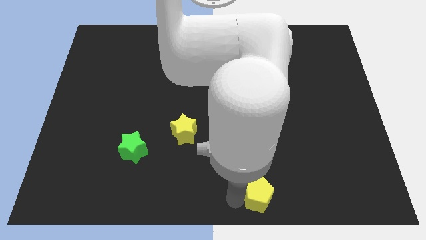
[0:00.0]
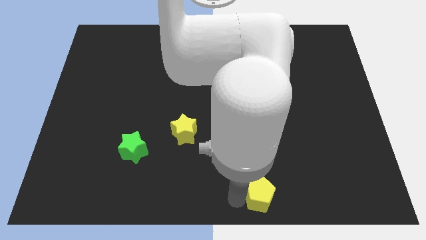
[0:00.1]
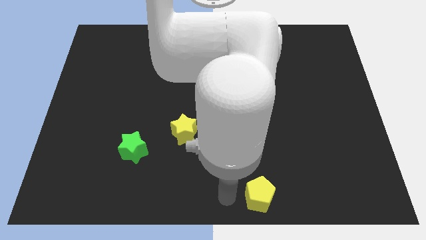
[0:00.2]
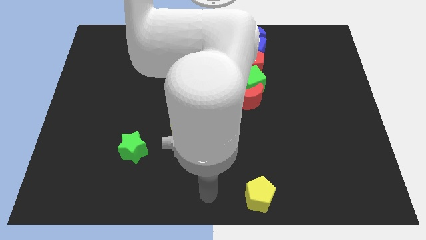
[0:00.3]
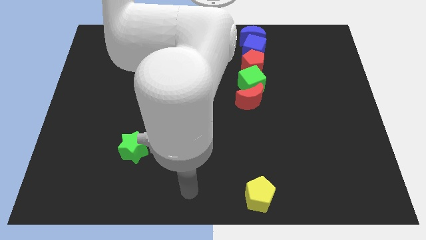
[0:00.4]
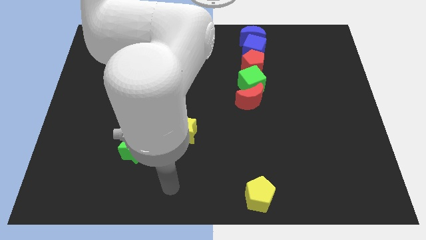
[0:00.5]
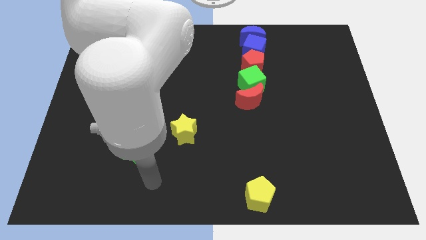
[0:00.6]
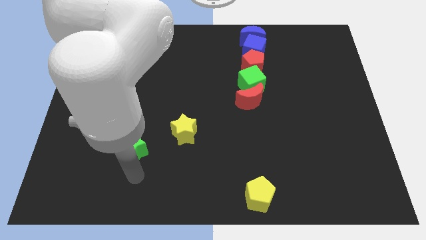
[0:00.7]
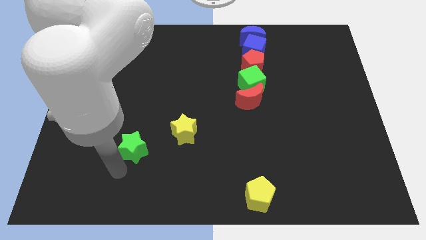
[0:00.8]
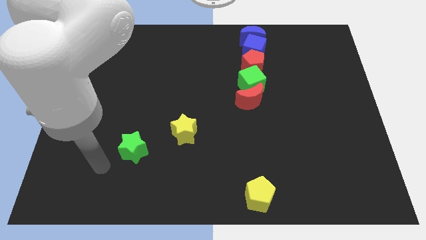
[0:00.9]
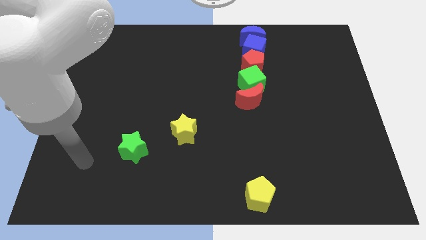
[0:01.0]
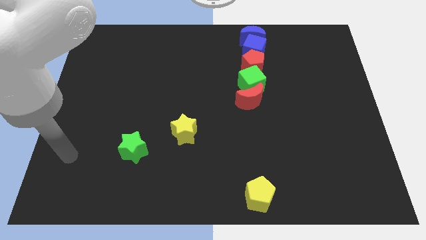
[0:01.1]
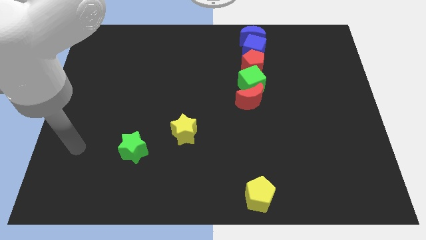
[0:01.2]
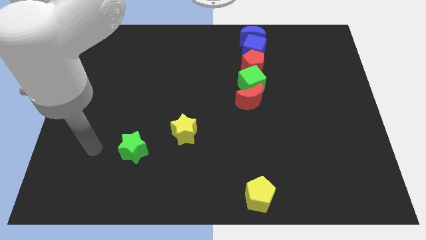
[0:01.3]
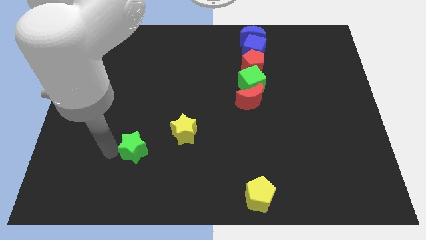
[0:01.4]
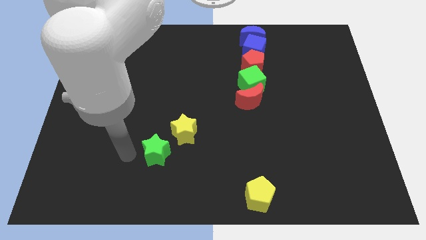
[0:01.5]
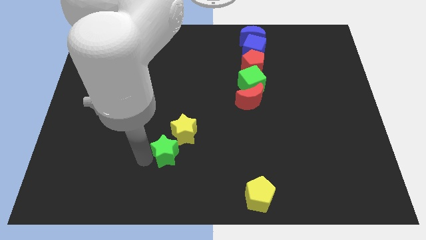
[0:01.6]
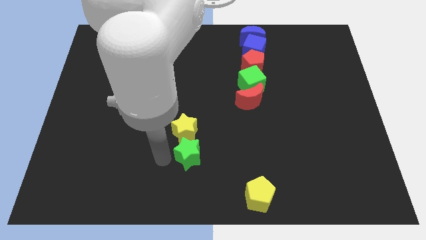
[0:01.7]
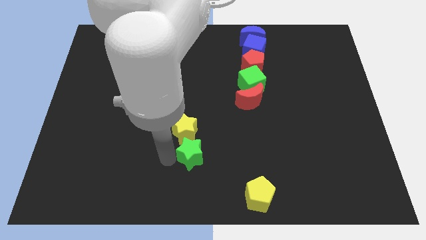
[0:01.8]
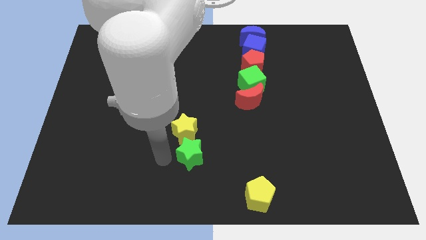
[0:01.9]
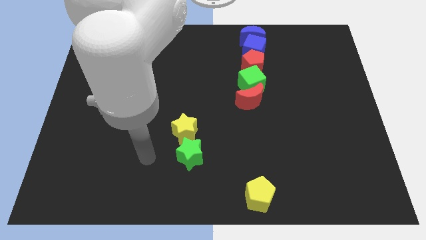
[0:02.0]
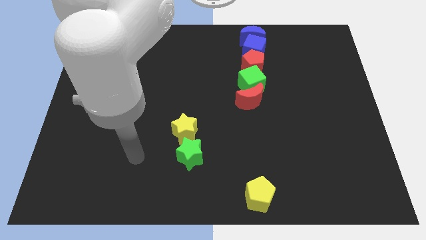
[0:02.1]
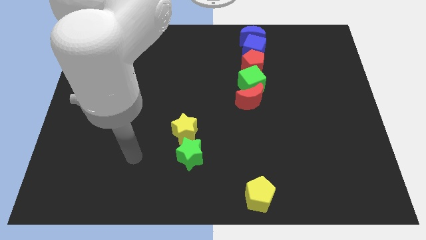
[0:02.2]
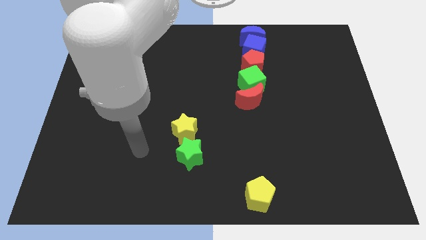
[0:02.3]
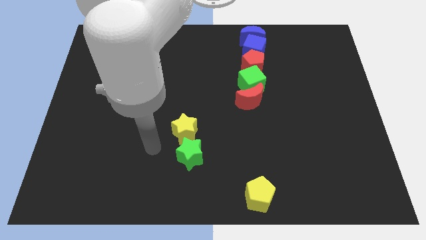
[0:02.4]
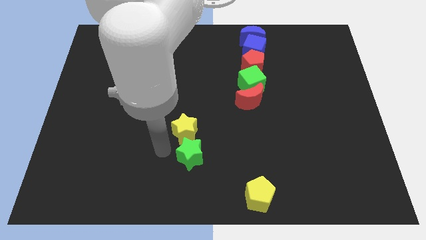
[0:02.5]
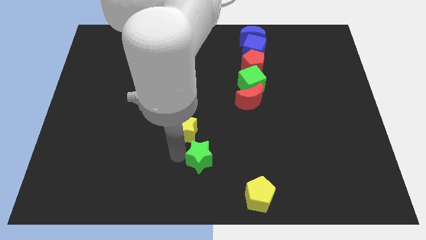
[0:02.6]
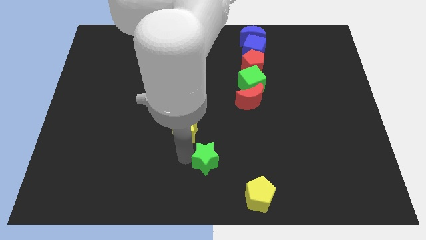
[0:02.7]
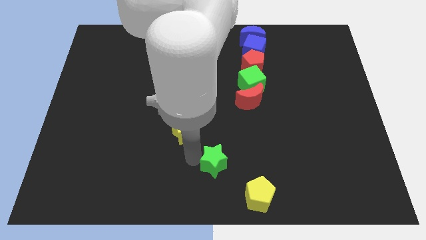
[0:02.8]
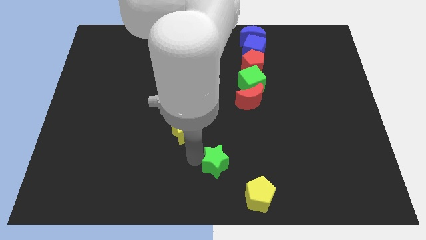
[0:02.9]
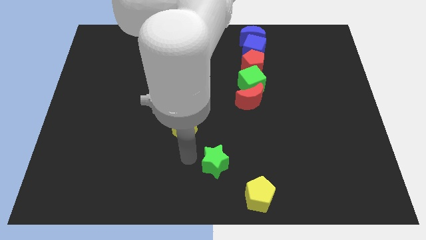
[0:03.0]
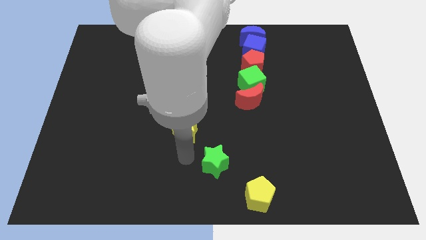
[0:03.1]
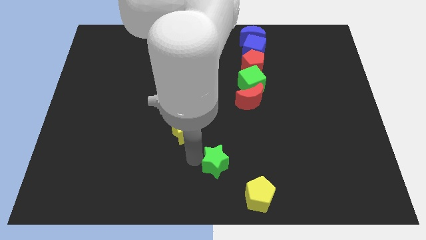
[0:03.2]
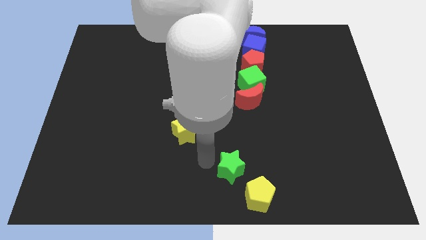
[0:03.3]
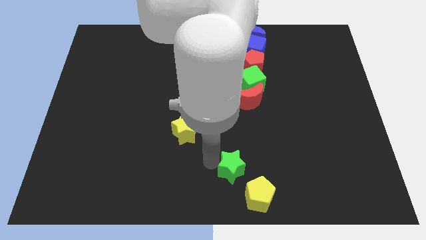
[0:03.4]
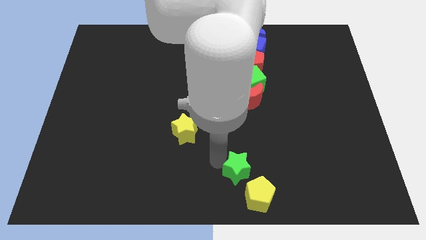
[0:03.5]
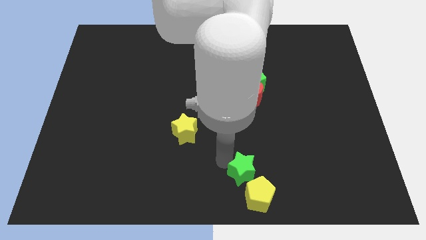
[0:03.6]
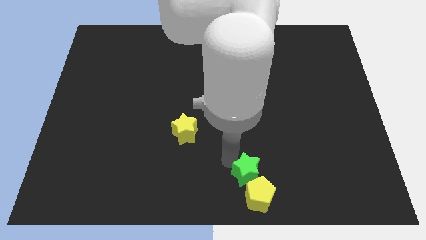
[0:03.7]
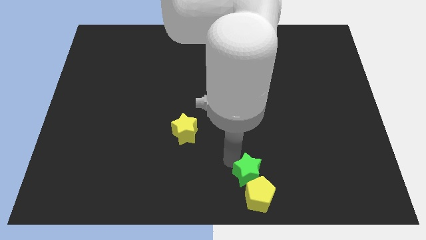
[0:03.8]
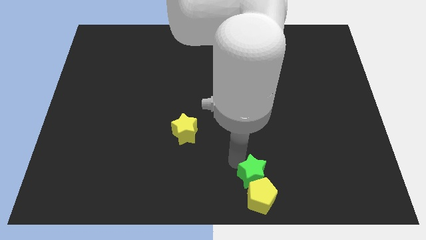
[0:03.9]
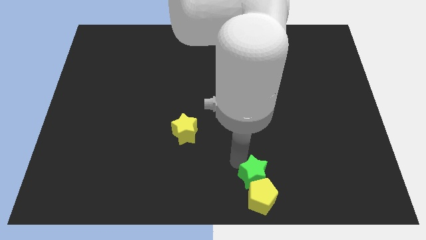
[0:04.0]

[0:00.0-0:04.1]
place the green star into the yellow pentagon

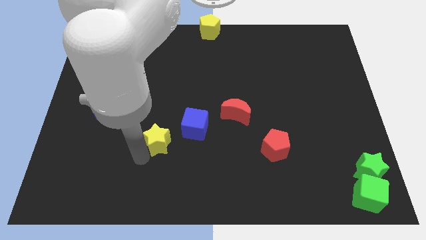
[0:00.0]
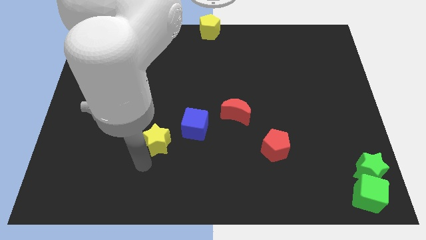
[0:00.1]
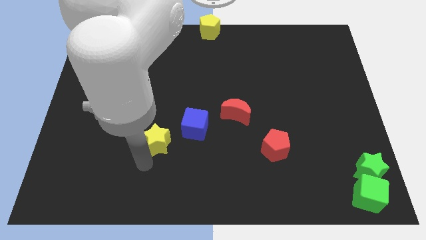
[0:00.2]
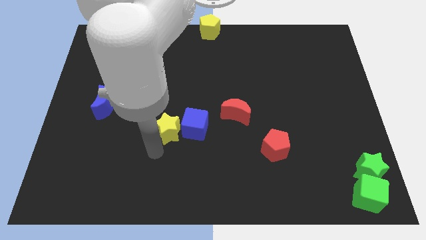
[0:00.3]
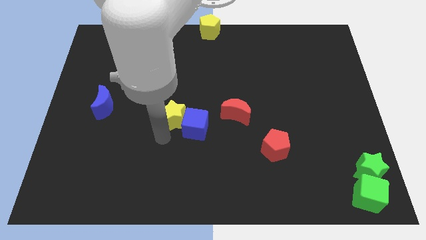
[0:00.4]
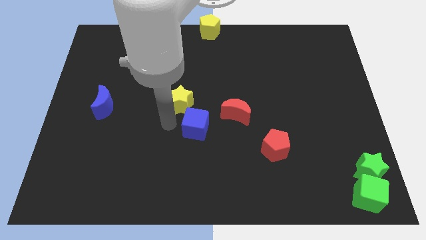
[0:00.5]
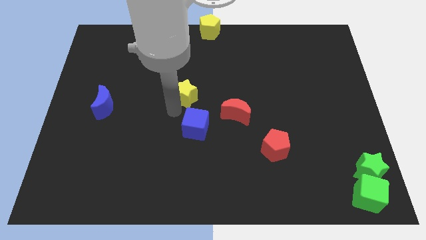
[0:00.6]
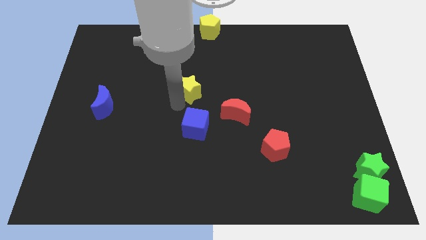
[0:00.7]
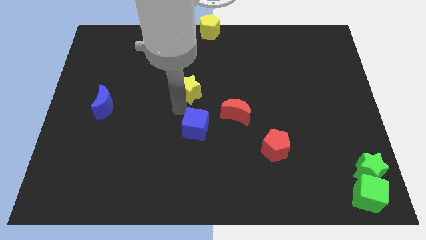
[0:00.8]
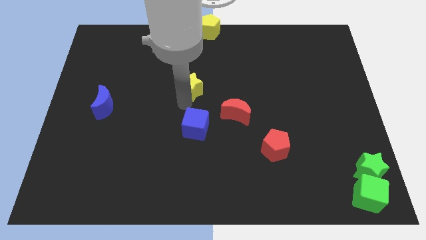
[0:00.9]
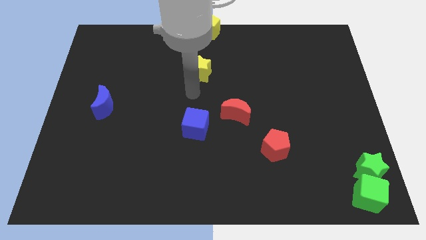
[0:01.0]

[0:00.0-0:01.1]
move yellow star below the yellow pentagon

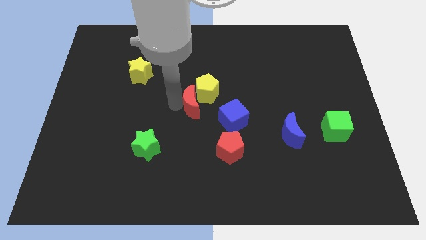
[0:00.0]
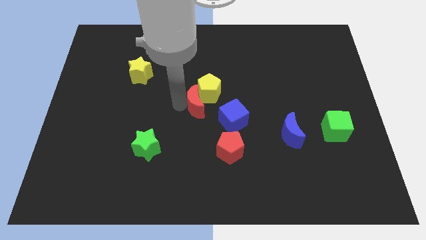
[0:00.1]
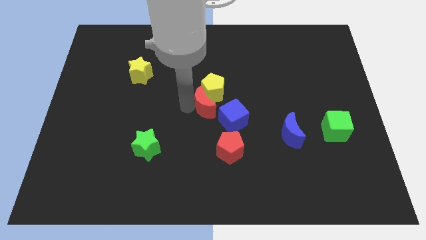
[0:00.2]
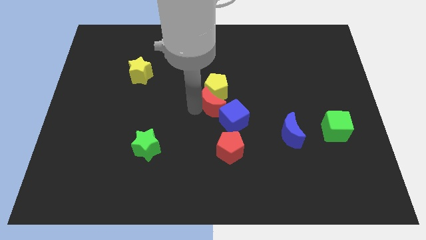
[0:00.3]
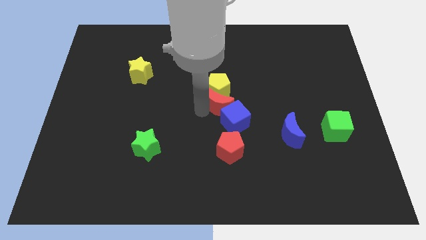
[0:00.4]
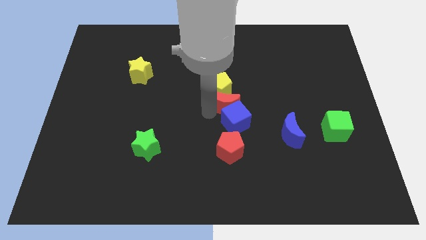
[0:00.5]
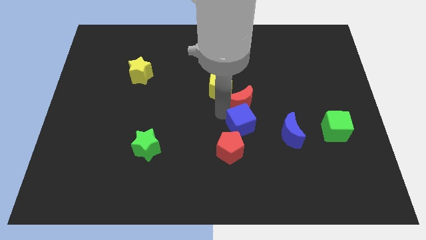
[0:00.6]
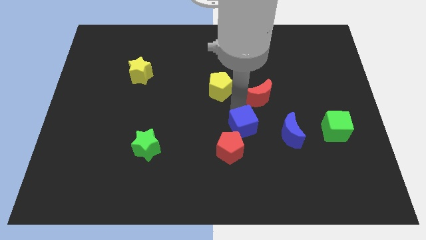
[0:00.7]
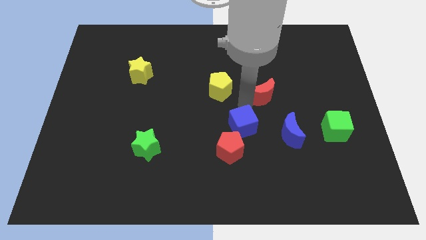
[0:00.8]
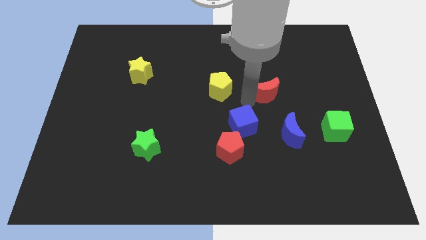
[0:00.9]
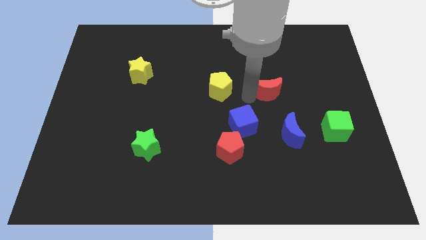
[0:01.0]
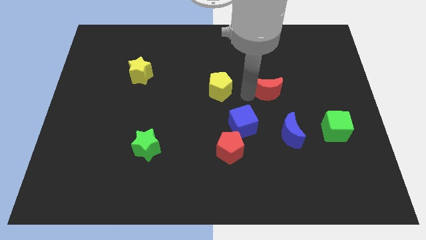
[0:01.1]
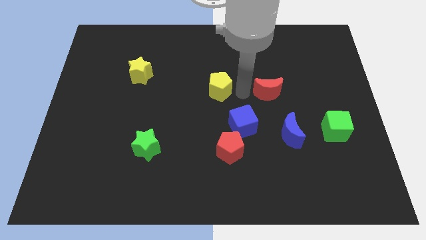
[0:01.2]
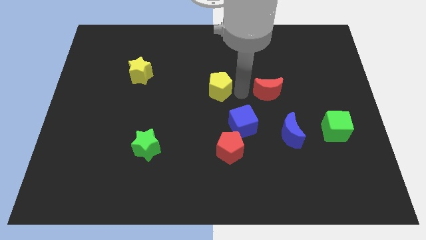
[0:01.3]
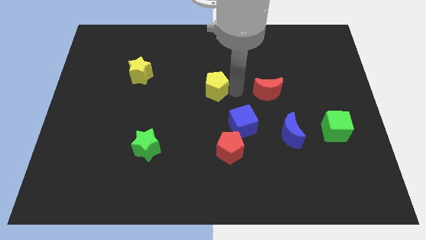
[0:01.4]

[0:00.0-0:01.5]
move the red moon to the right of the yellow pentagon

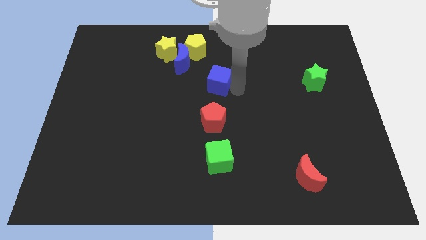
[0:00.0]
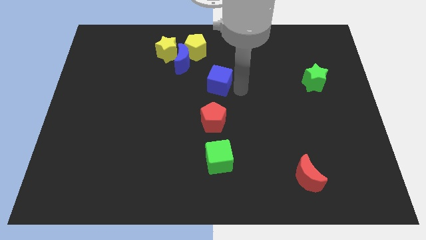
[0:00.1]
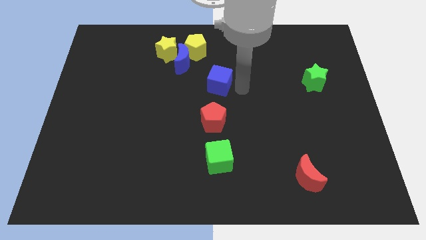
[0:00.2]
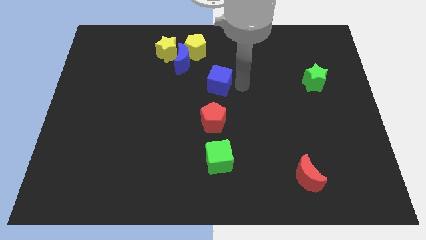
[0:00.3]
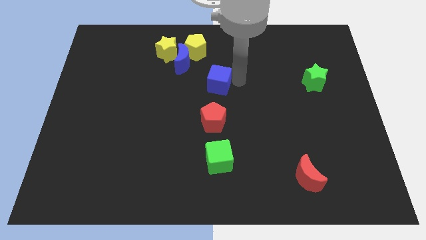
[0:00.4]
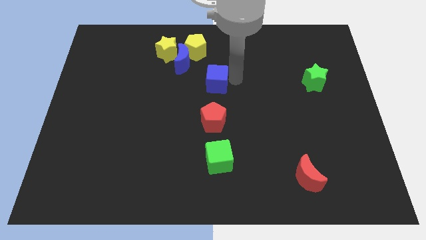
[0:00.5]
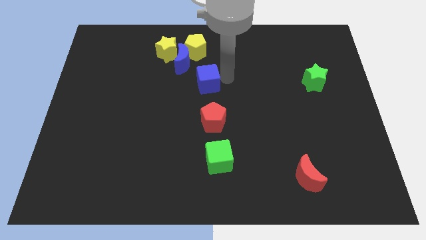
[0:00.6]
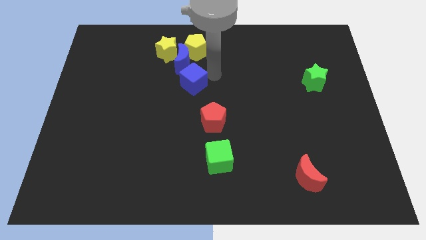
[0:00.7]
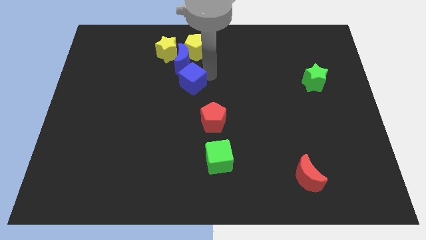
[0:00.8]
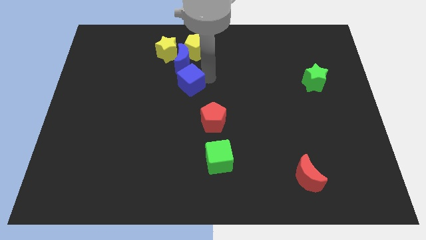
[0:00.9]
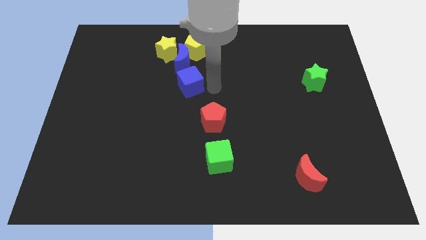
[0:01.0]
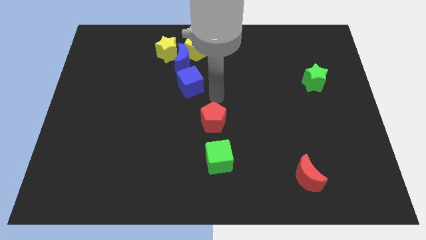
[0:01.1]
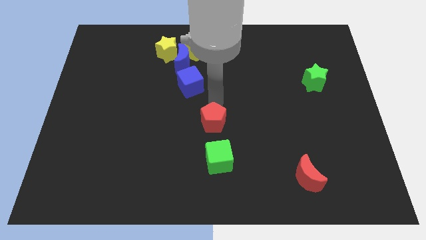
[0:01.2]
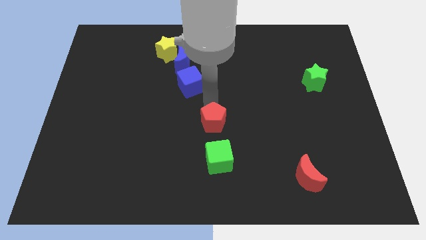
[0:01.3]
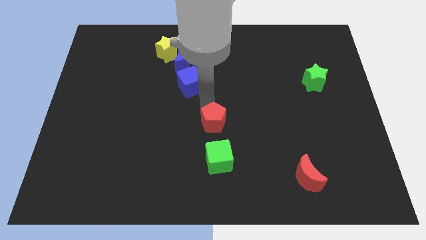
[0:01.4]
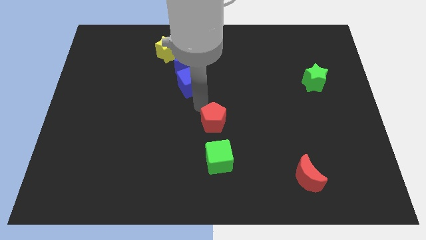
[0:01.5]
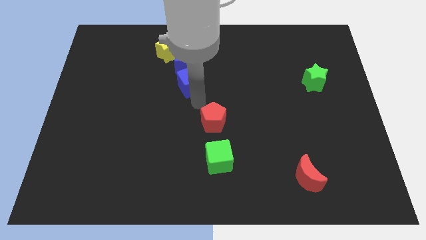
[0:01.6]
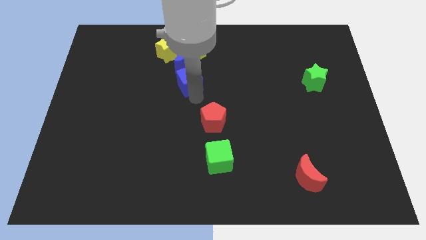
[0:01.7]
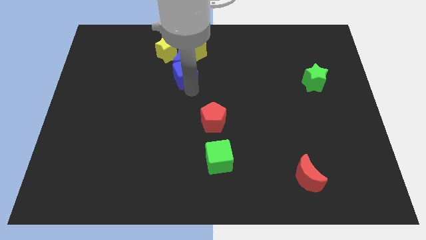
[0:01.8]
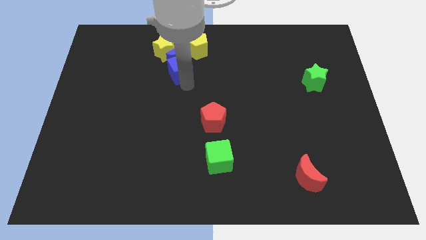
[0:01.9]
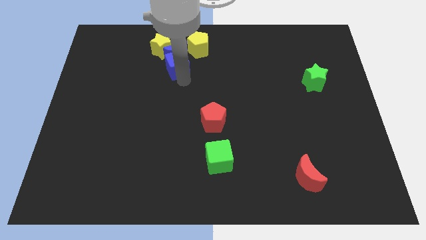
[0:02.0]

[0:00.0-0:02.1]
slide blue cube into blue moon

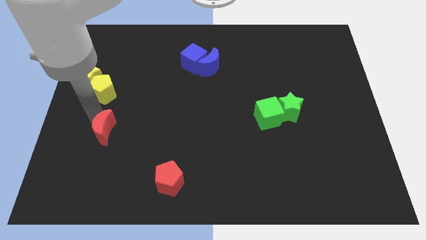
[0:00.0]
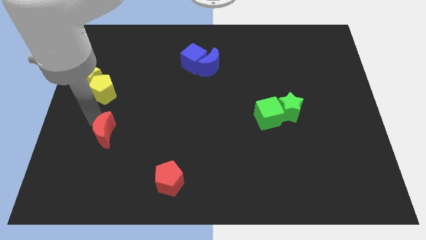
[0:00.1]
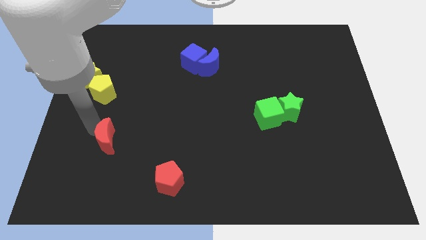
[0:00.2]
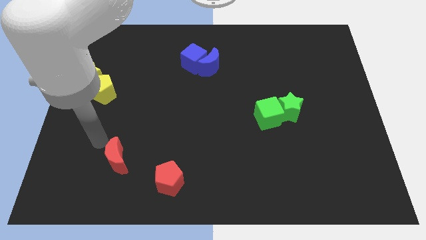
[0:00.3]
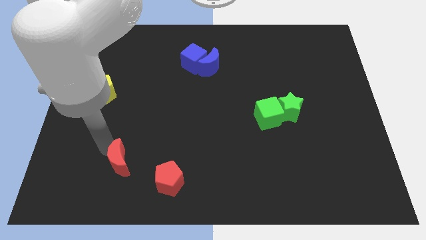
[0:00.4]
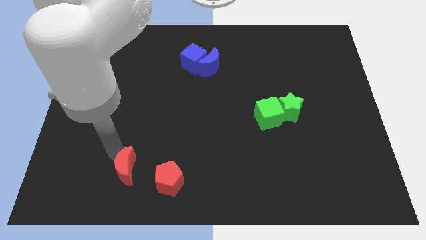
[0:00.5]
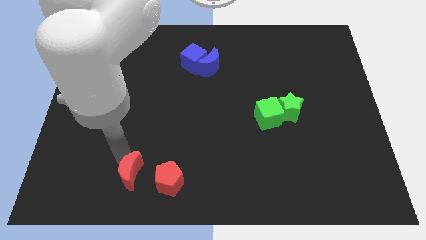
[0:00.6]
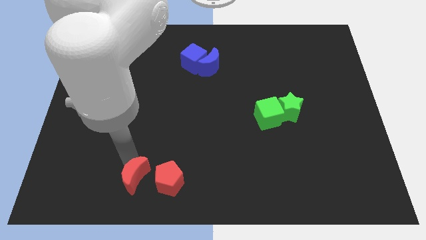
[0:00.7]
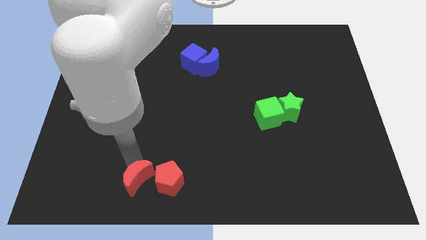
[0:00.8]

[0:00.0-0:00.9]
push red crescent beside red pentagon
